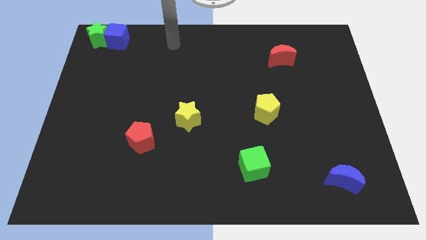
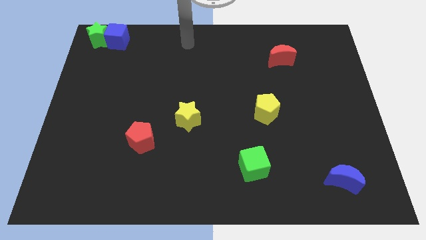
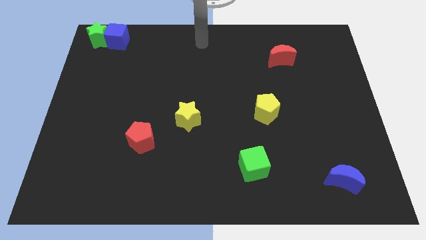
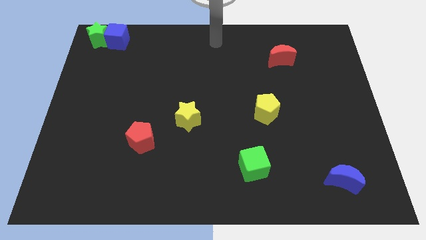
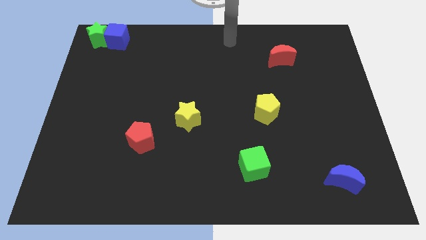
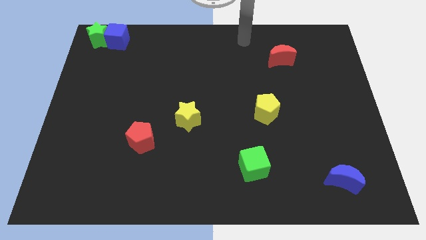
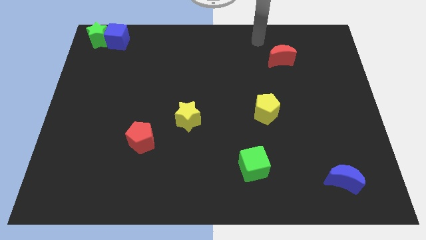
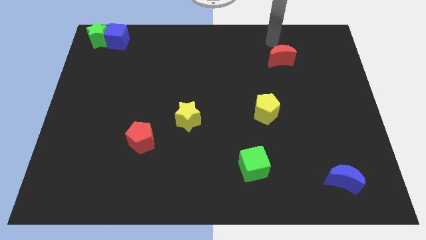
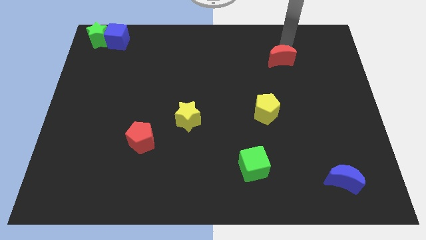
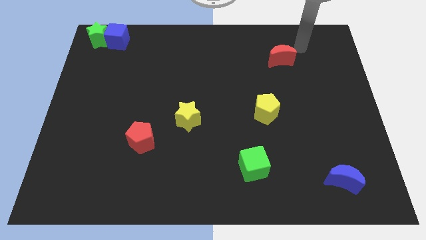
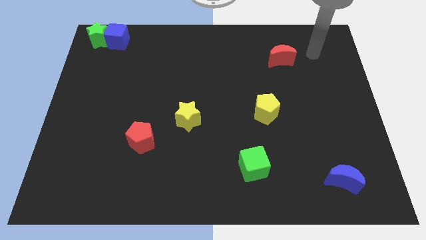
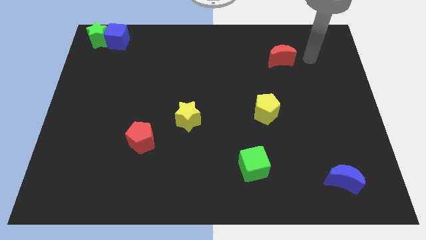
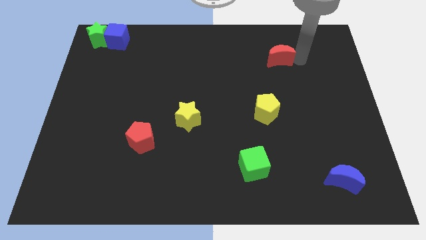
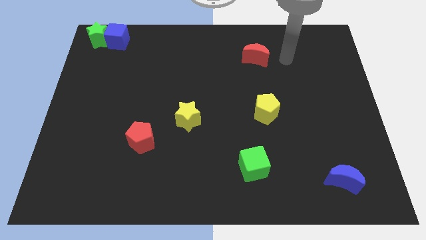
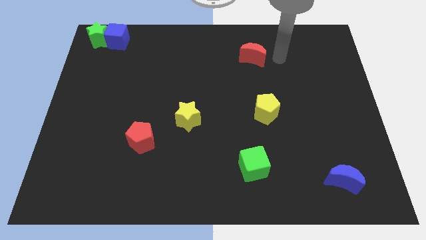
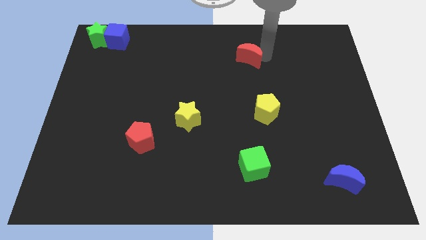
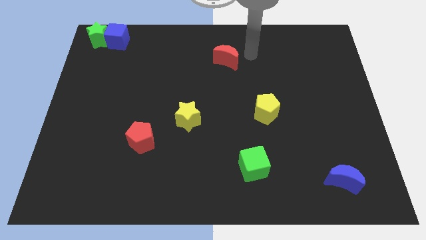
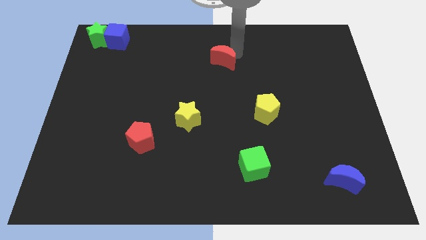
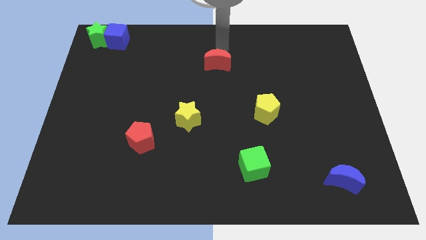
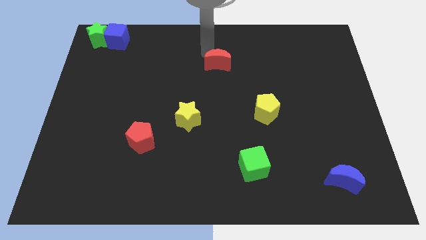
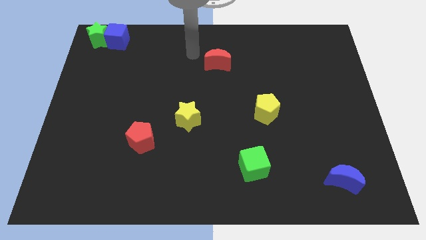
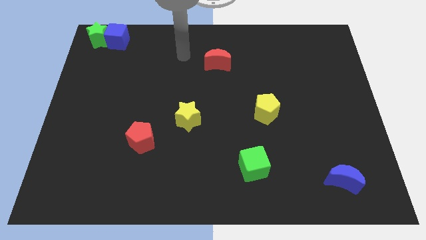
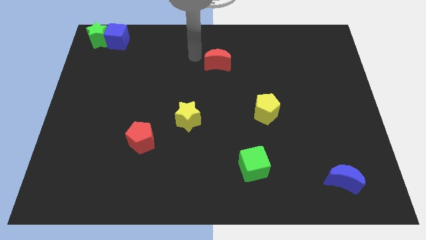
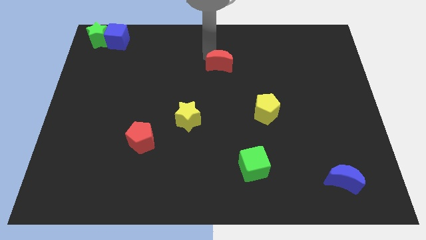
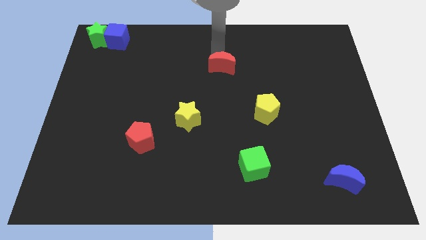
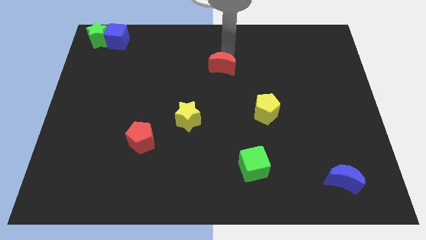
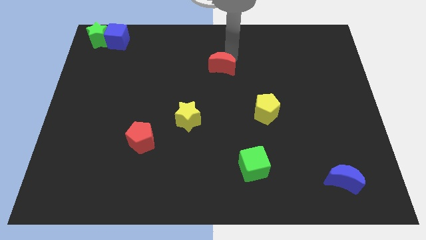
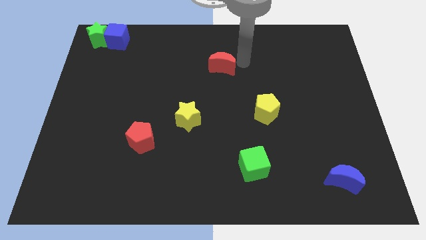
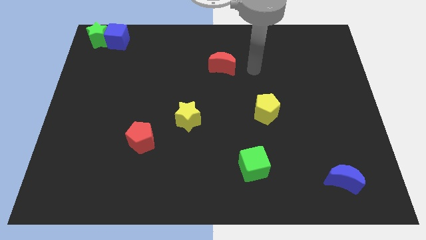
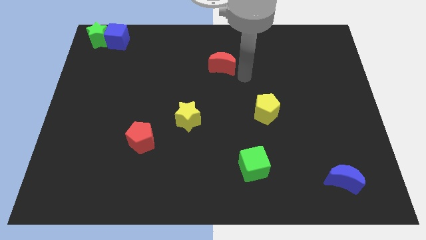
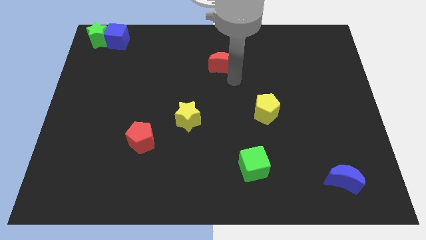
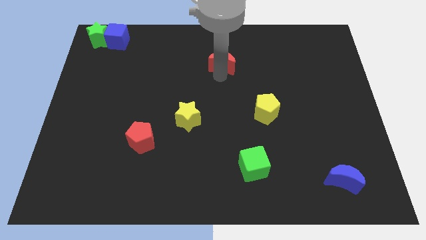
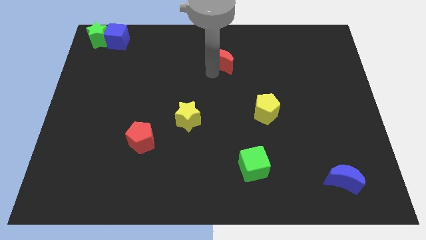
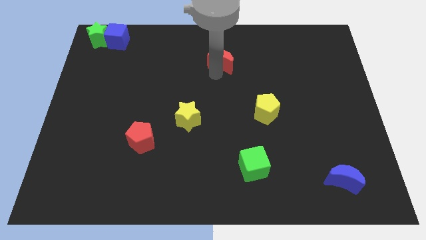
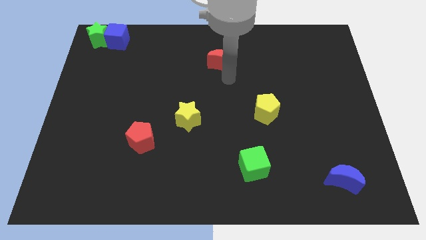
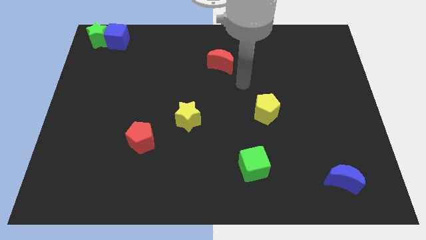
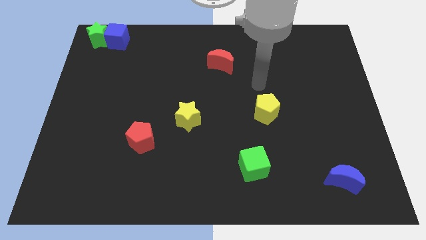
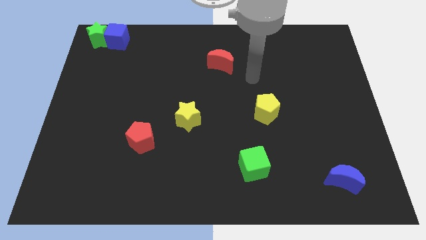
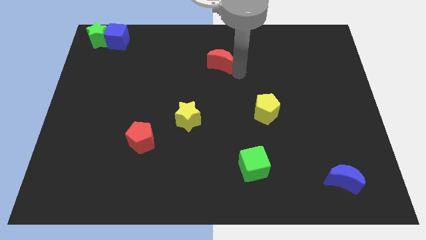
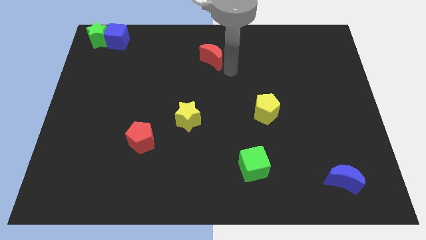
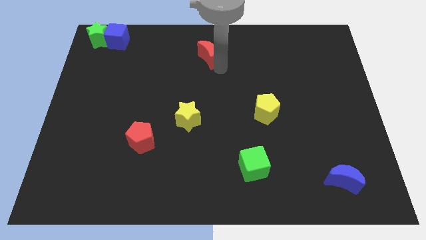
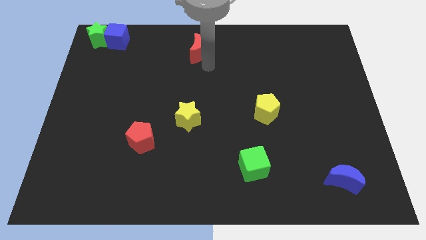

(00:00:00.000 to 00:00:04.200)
move the red moon to the top center

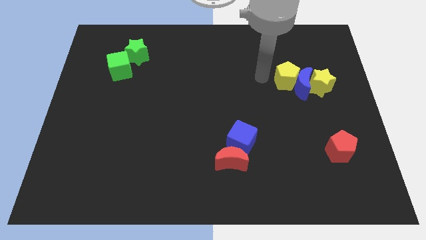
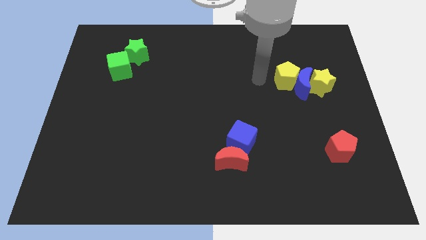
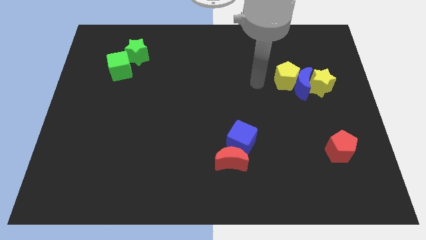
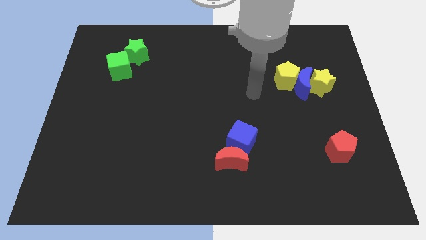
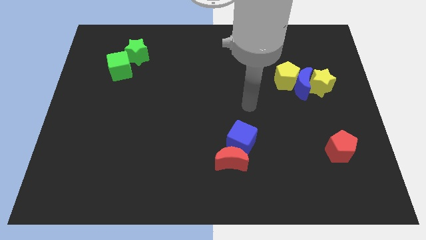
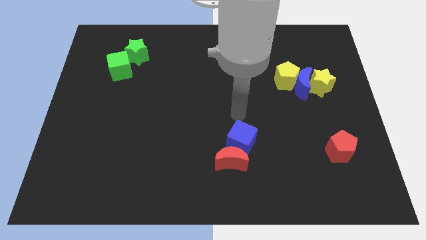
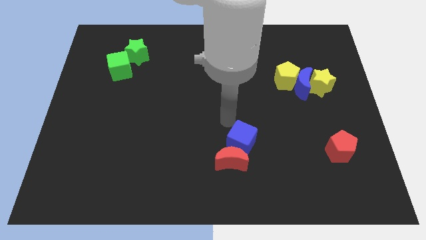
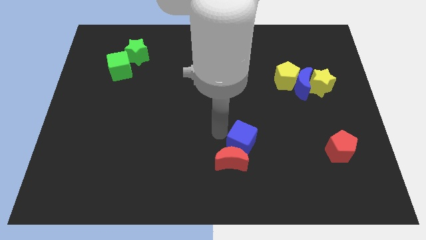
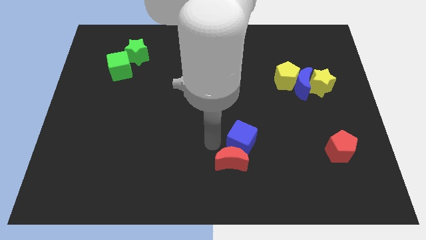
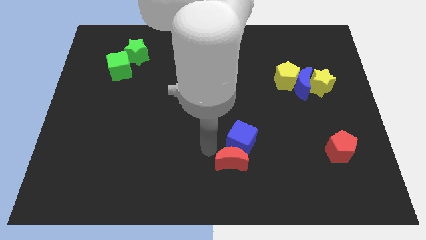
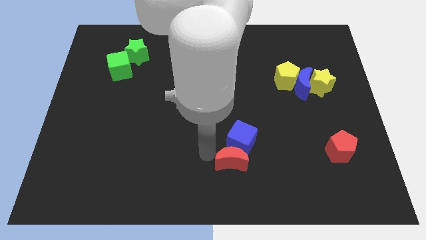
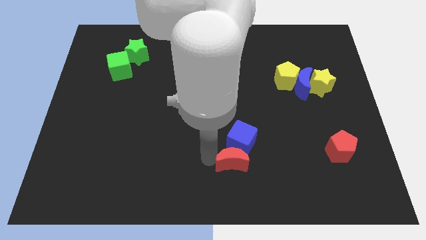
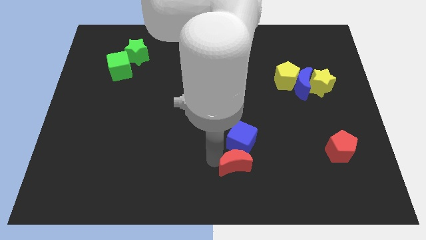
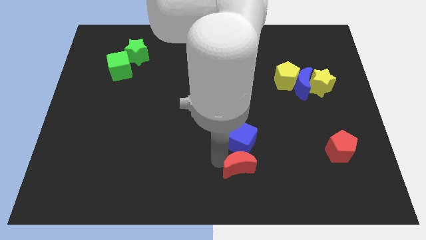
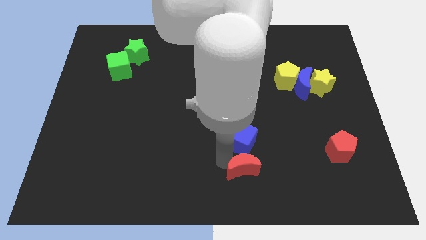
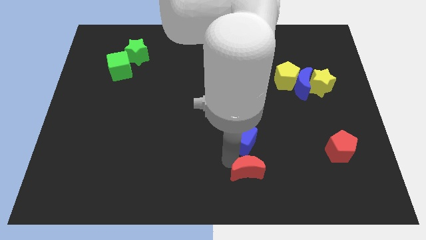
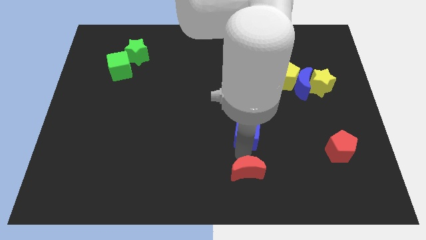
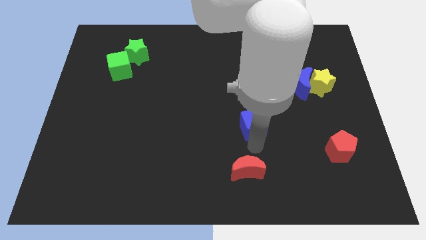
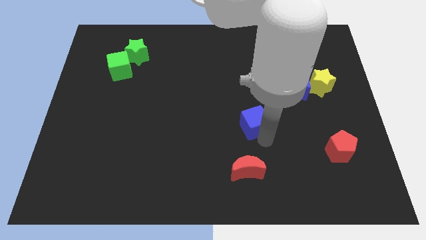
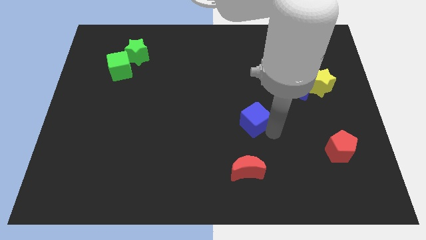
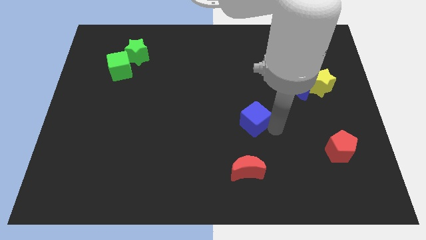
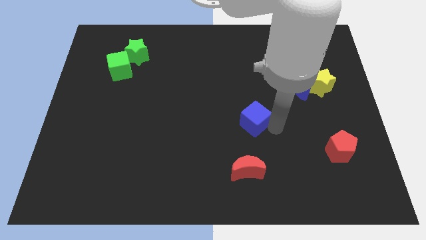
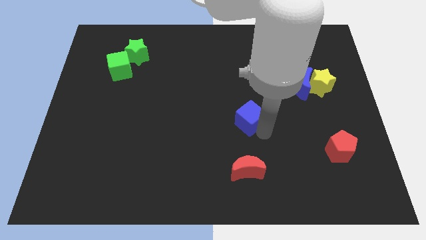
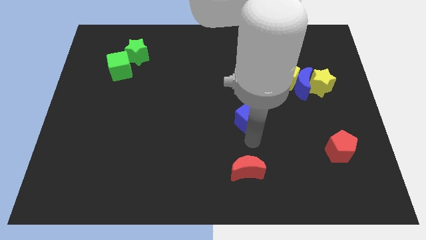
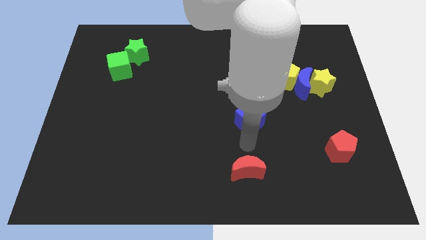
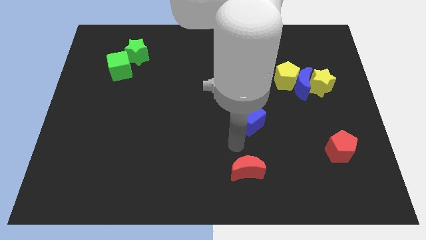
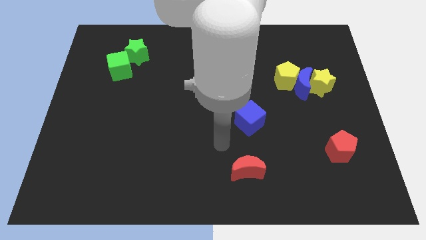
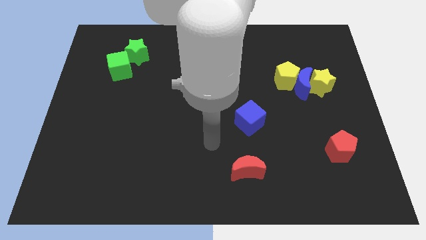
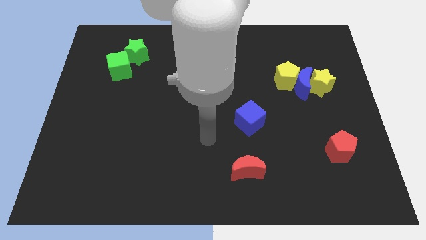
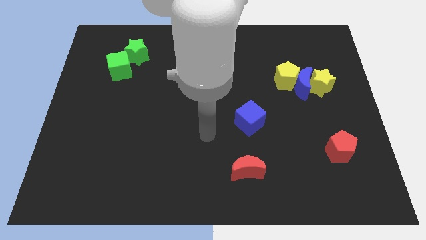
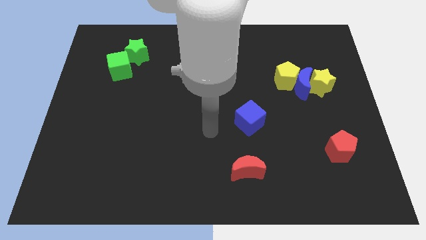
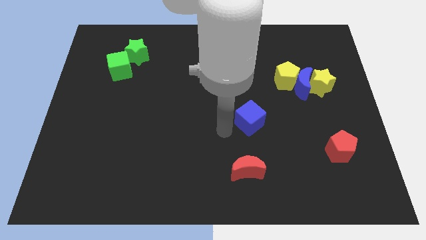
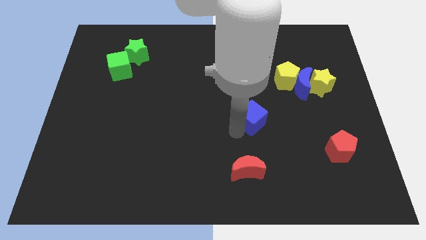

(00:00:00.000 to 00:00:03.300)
push the blue cube slightly to the top

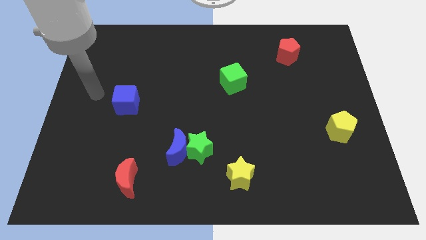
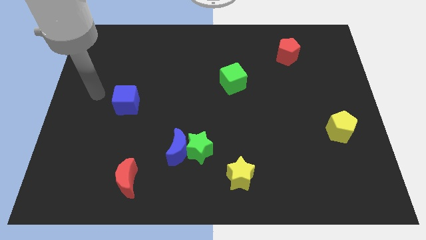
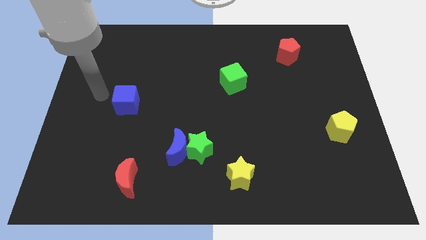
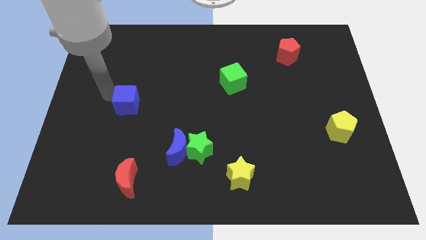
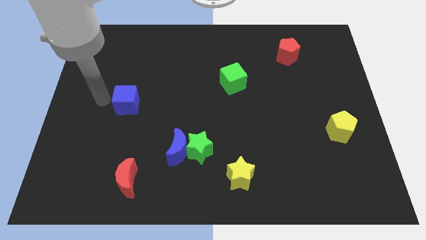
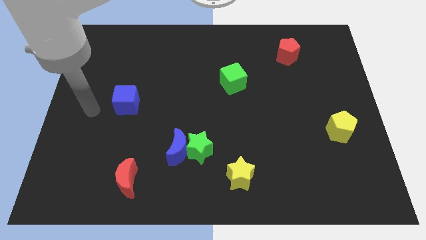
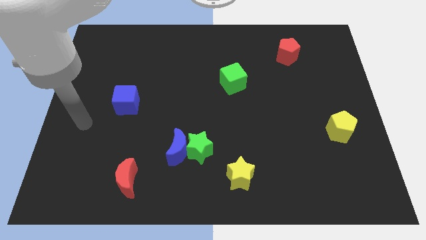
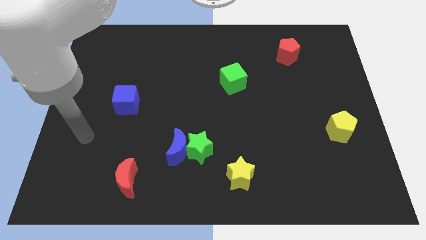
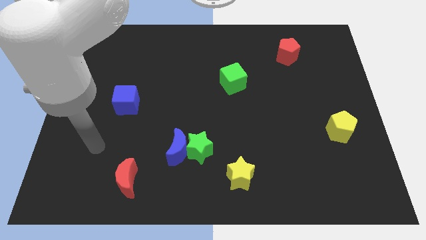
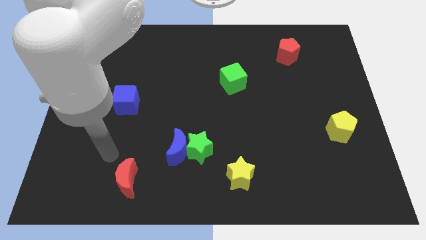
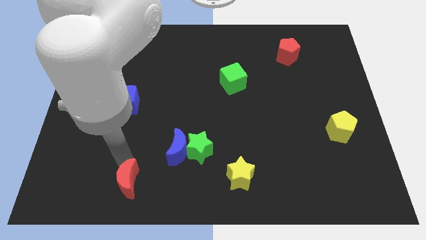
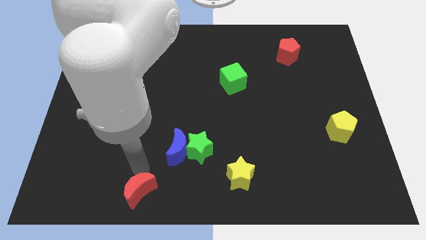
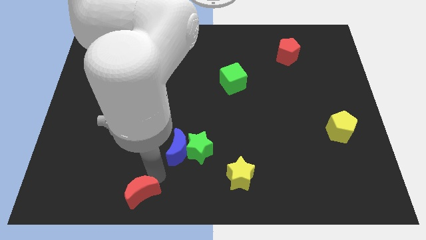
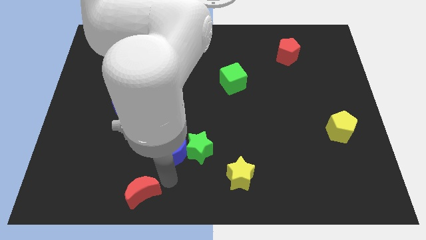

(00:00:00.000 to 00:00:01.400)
slightly move the red moon to the bottom side of the board
